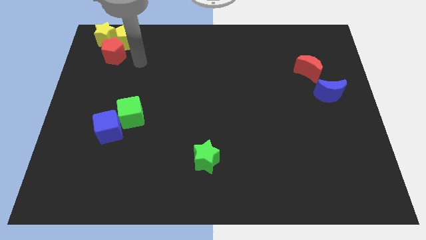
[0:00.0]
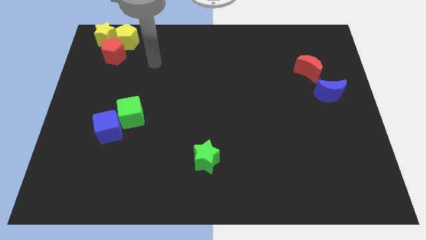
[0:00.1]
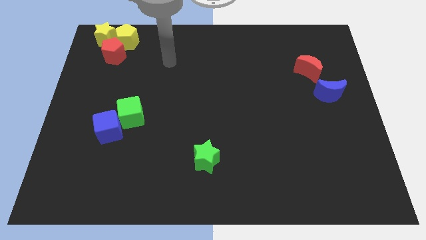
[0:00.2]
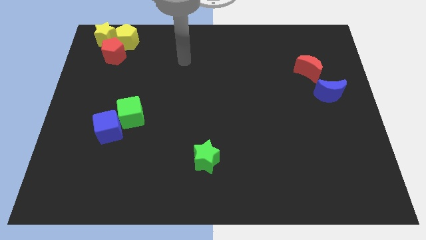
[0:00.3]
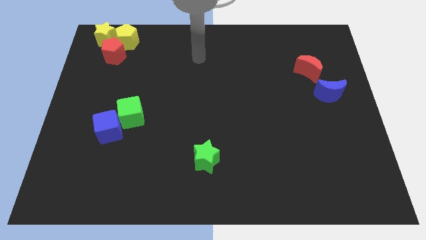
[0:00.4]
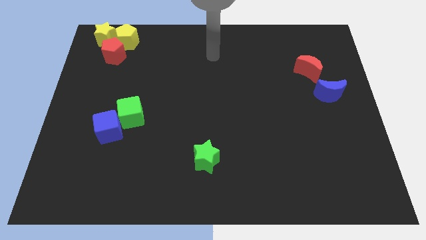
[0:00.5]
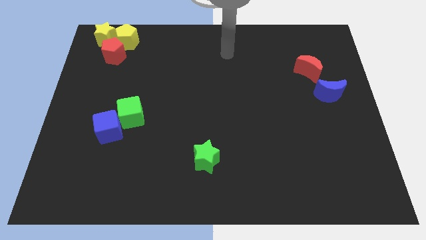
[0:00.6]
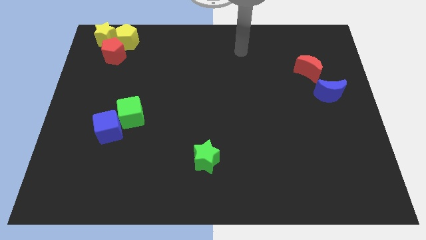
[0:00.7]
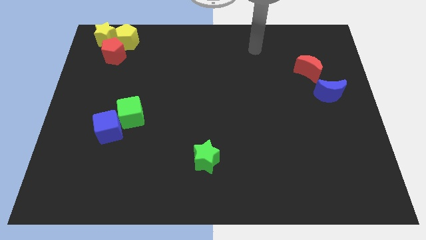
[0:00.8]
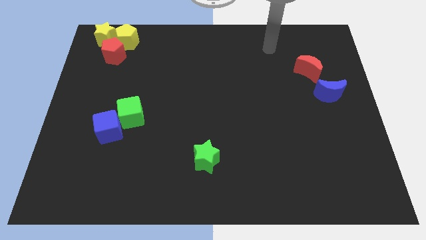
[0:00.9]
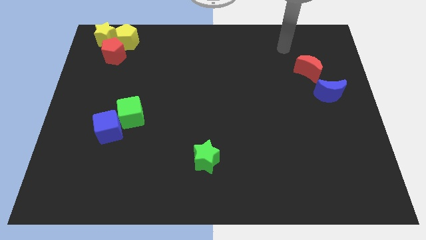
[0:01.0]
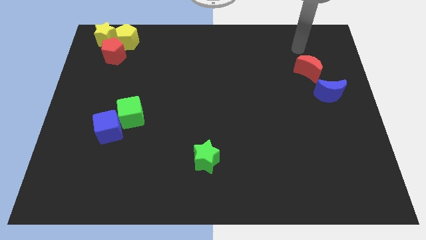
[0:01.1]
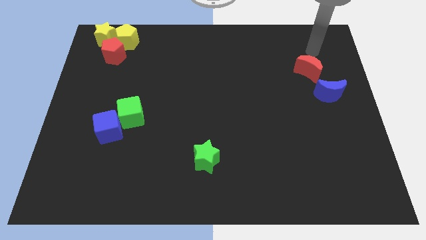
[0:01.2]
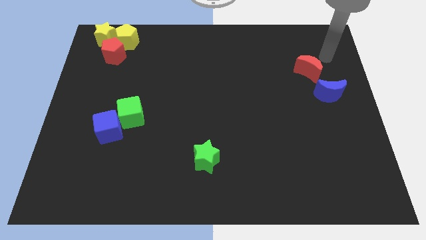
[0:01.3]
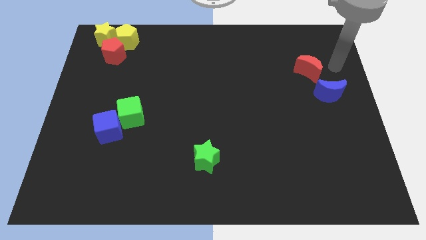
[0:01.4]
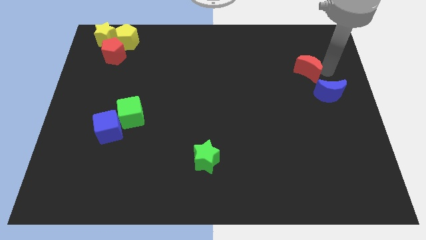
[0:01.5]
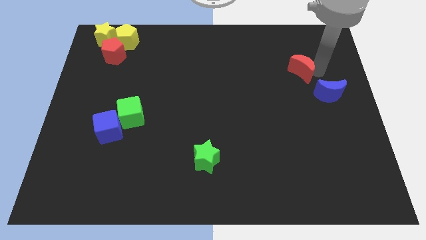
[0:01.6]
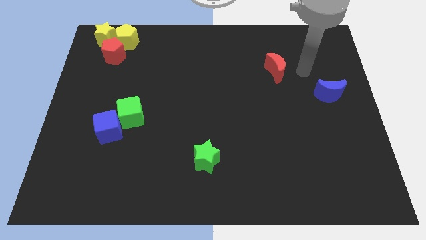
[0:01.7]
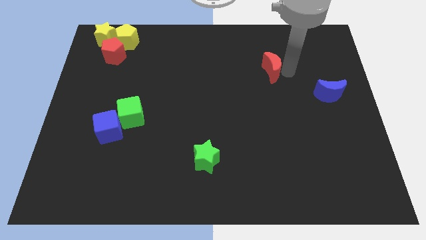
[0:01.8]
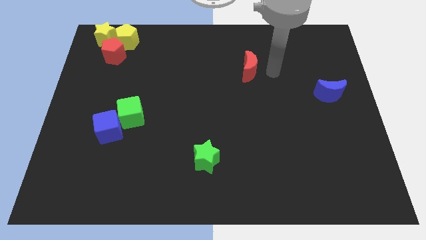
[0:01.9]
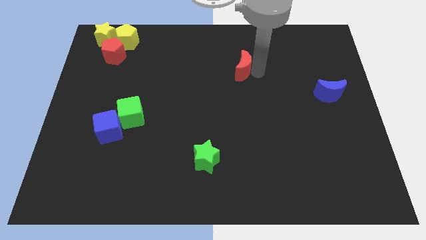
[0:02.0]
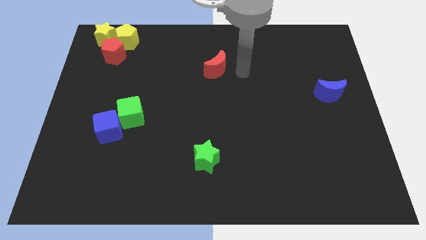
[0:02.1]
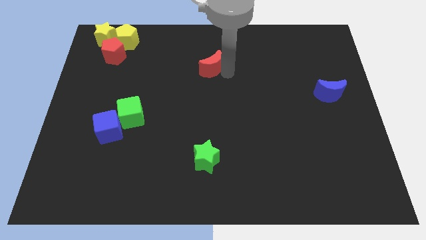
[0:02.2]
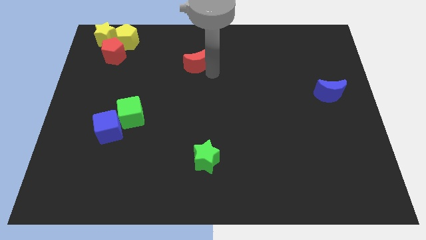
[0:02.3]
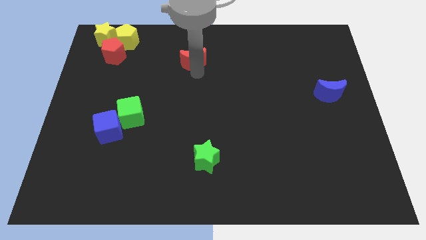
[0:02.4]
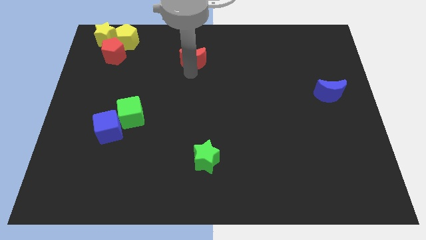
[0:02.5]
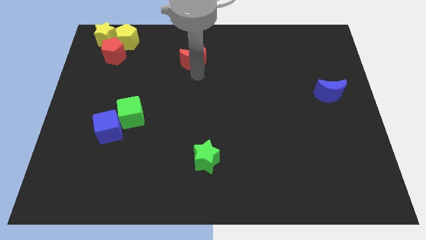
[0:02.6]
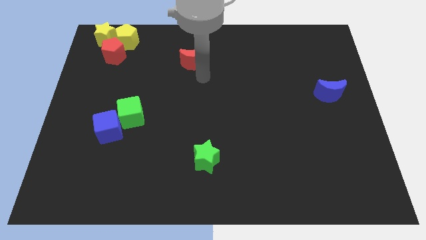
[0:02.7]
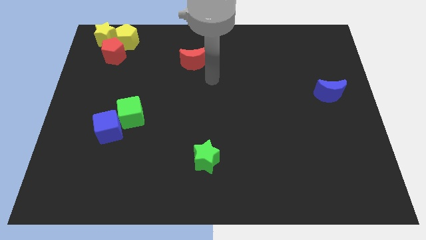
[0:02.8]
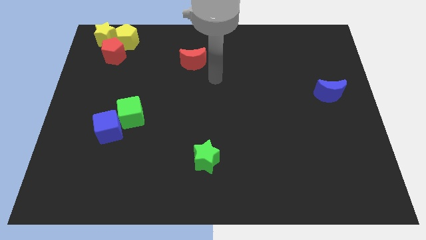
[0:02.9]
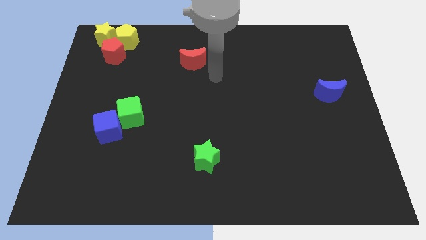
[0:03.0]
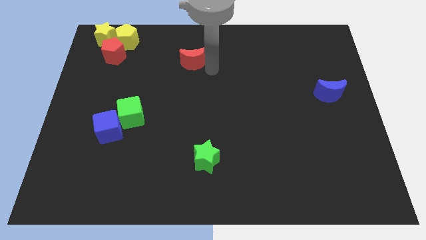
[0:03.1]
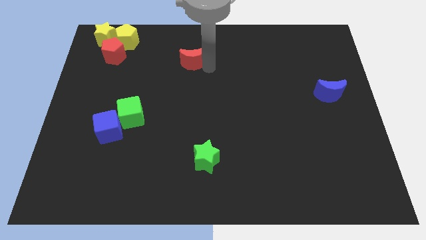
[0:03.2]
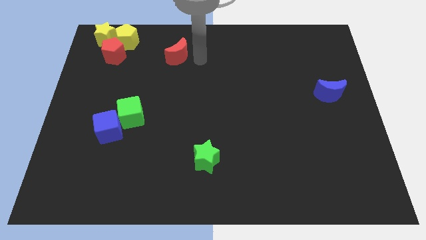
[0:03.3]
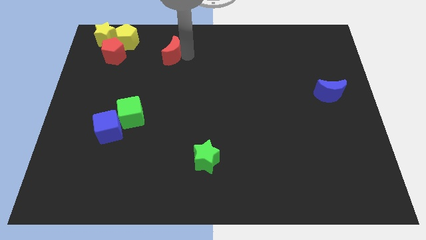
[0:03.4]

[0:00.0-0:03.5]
move the red moon towards the top left corner of the board

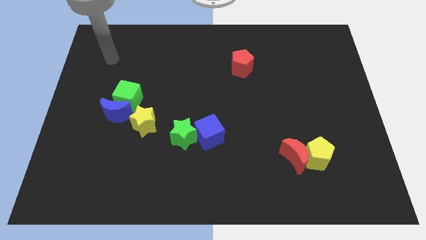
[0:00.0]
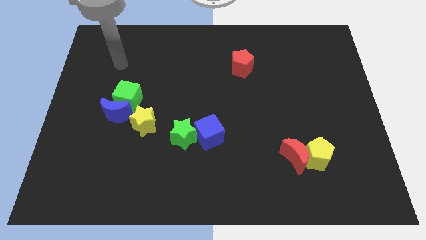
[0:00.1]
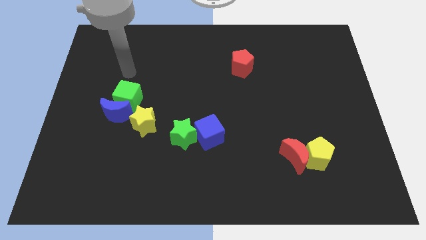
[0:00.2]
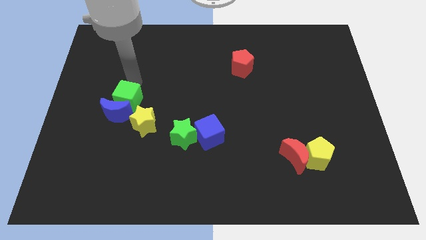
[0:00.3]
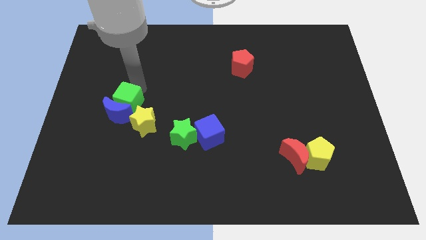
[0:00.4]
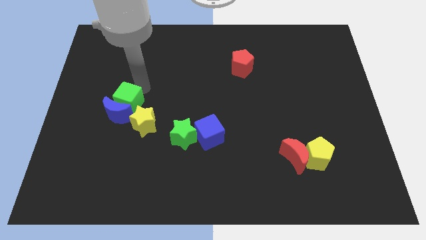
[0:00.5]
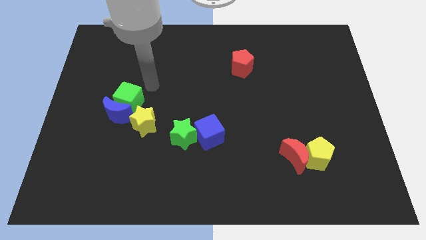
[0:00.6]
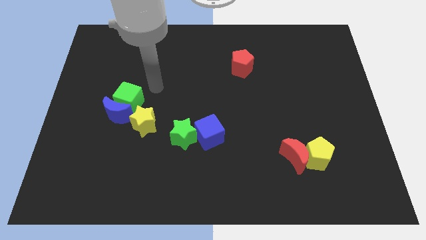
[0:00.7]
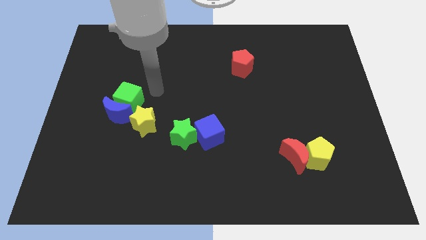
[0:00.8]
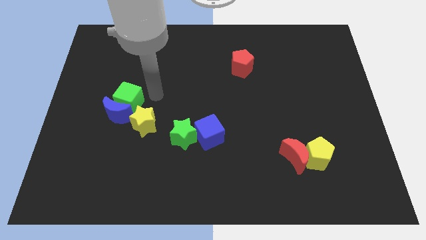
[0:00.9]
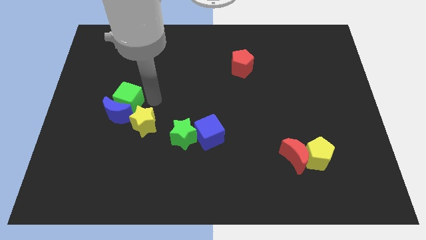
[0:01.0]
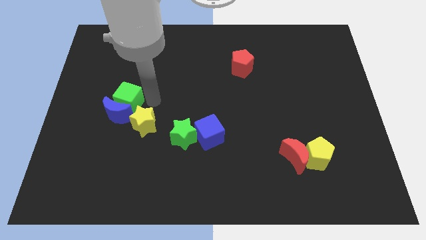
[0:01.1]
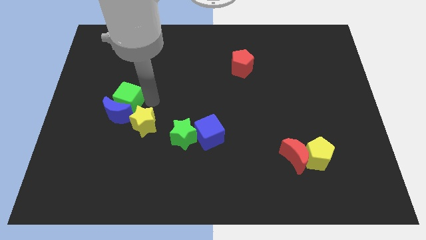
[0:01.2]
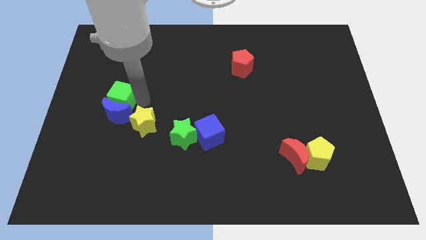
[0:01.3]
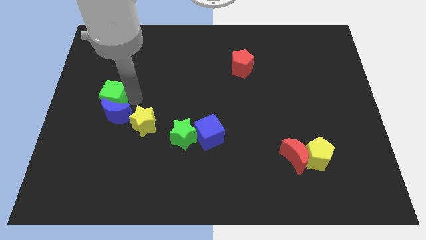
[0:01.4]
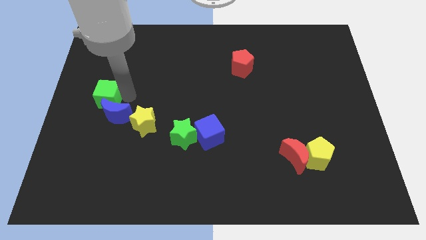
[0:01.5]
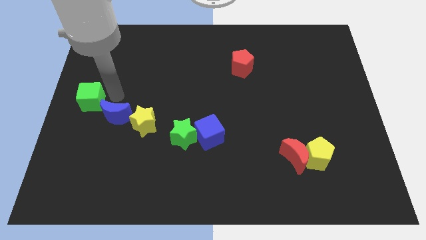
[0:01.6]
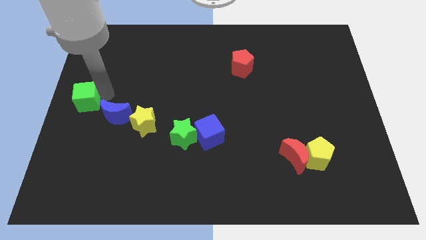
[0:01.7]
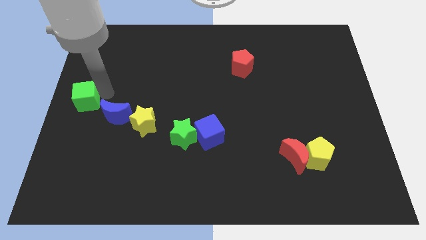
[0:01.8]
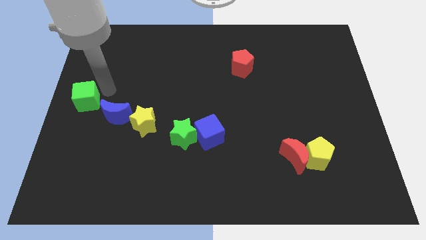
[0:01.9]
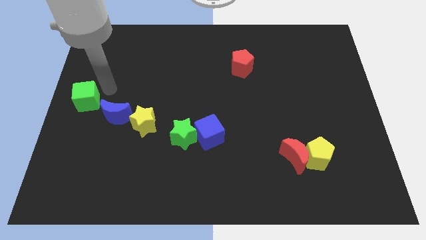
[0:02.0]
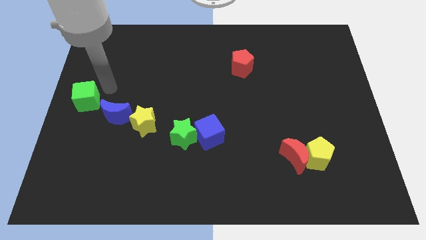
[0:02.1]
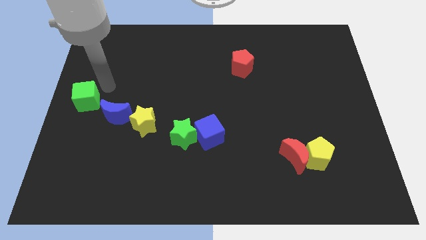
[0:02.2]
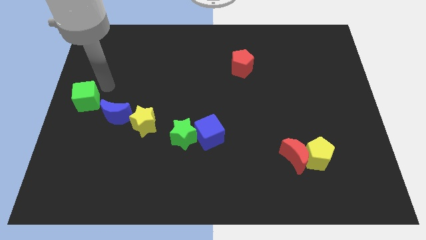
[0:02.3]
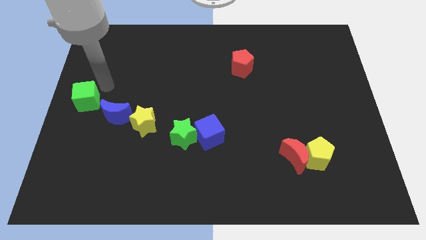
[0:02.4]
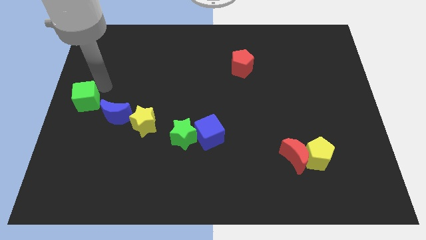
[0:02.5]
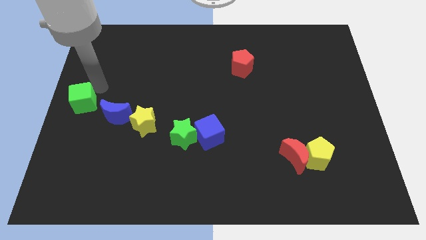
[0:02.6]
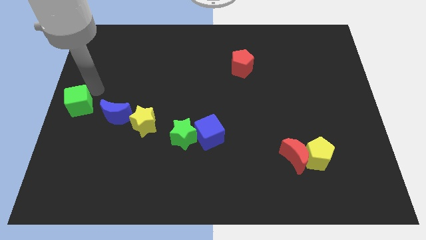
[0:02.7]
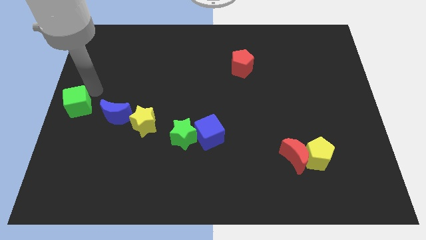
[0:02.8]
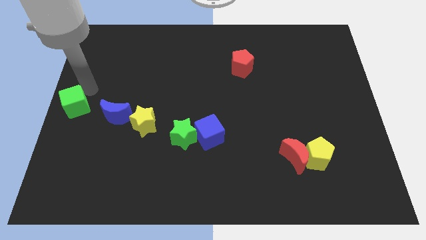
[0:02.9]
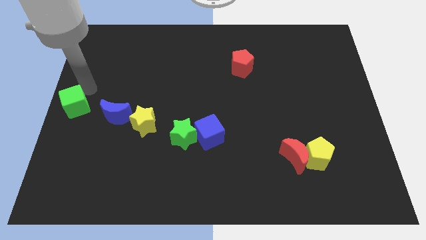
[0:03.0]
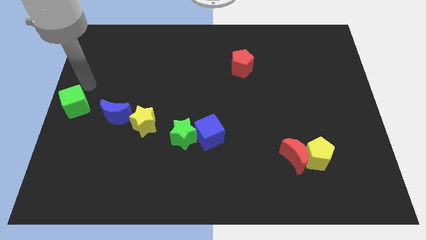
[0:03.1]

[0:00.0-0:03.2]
put the green cube at the center left

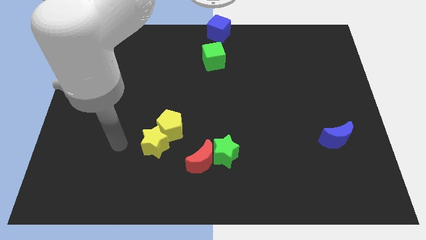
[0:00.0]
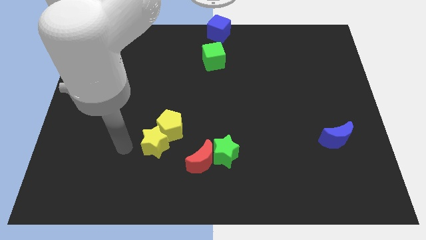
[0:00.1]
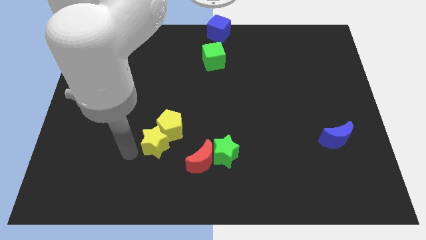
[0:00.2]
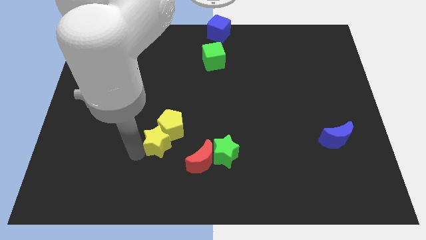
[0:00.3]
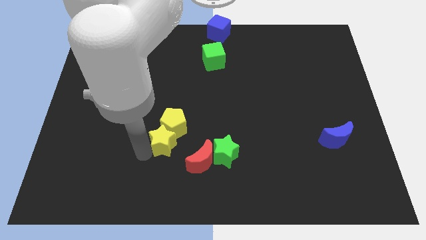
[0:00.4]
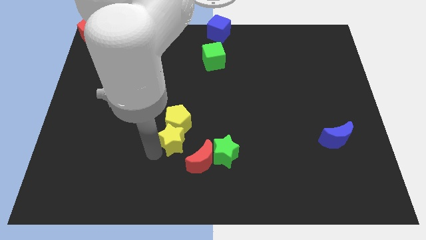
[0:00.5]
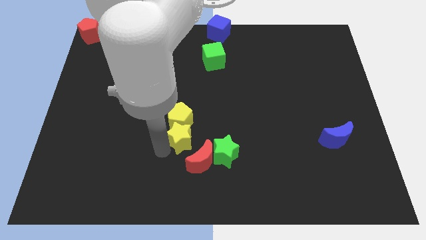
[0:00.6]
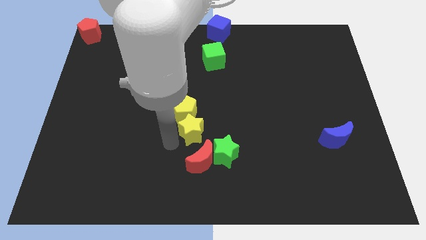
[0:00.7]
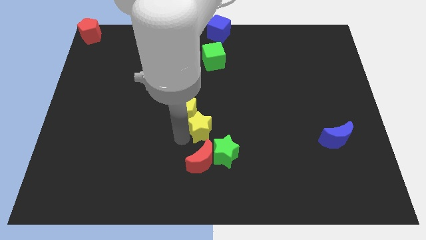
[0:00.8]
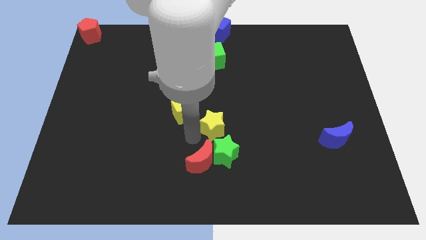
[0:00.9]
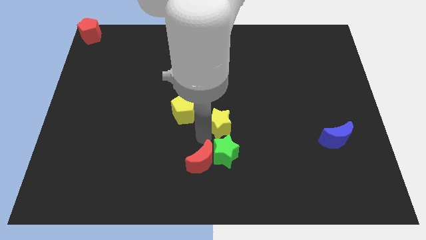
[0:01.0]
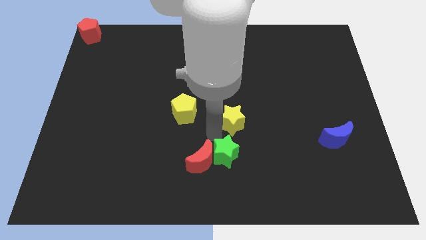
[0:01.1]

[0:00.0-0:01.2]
move the yellow star to the top side of the green star

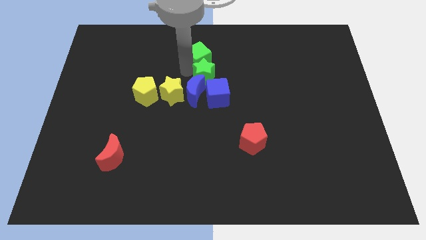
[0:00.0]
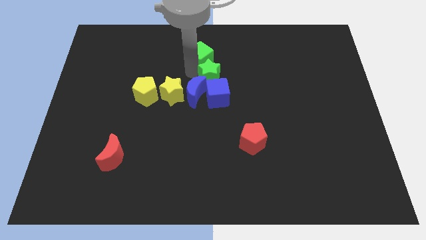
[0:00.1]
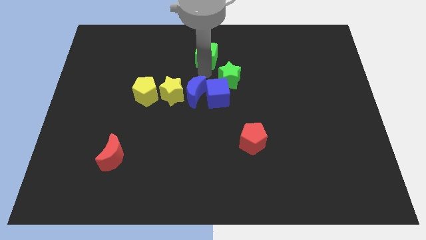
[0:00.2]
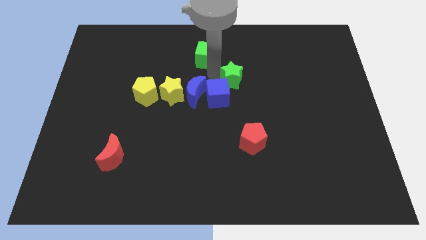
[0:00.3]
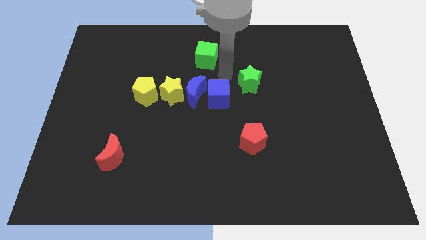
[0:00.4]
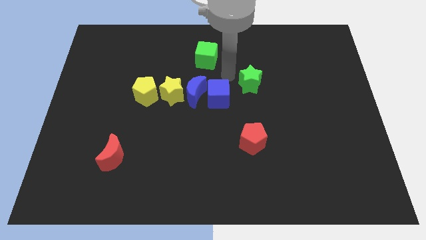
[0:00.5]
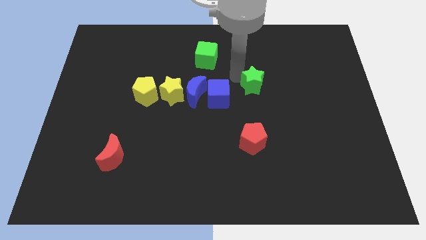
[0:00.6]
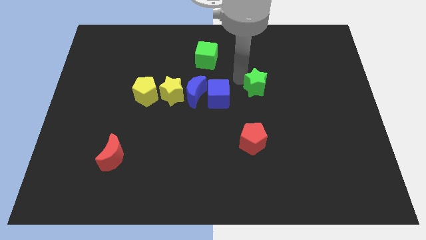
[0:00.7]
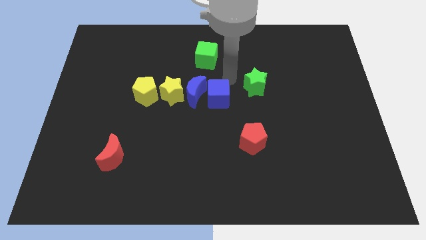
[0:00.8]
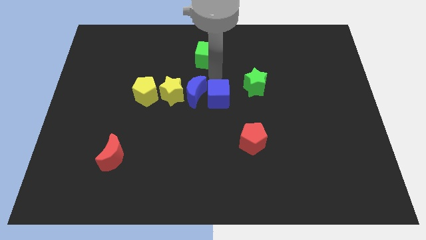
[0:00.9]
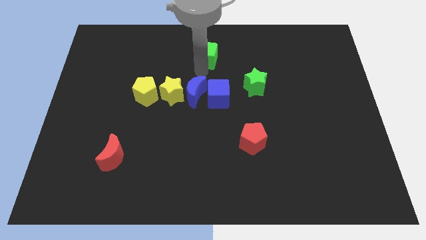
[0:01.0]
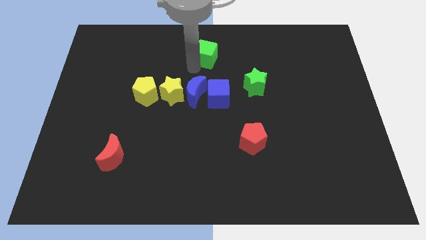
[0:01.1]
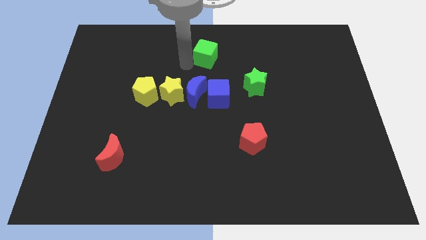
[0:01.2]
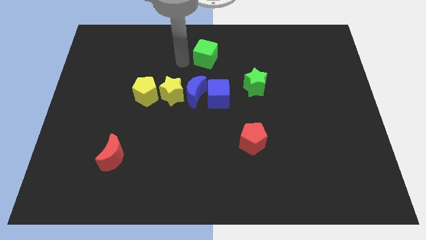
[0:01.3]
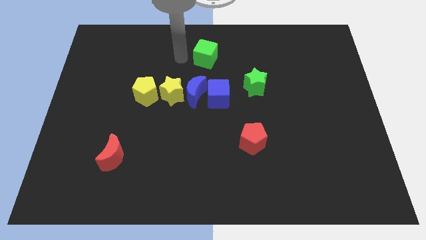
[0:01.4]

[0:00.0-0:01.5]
separate the green star from the green cube
